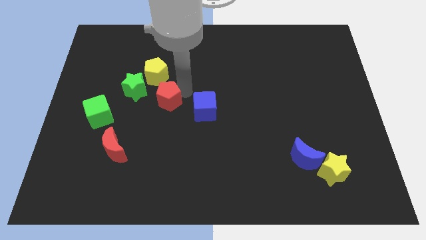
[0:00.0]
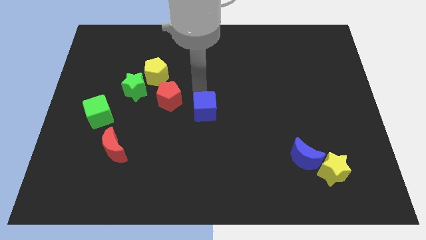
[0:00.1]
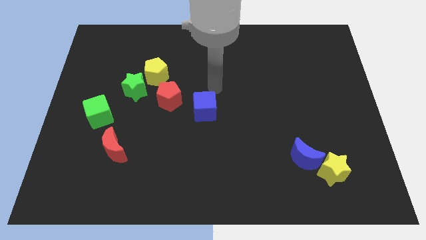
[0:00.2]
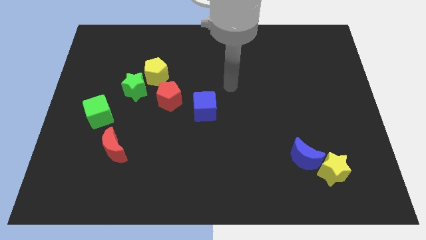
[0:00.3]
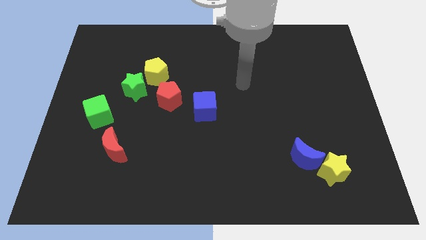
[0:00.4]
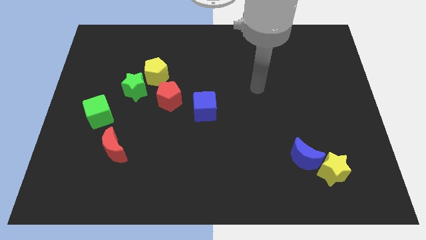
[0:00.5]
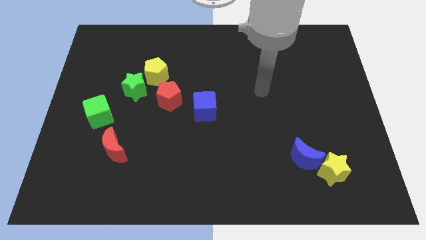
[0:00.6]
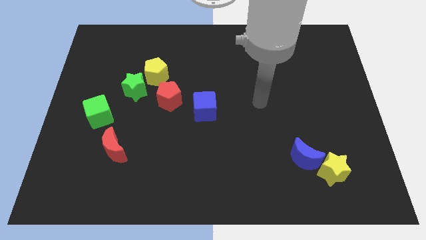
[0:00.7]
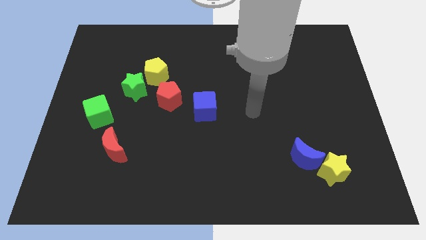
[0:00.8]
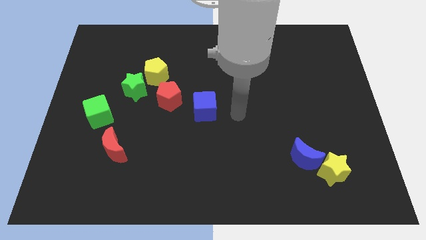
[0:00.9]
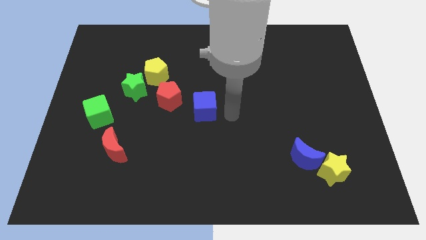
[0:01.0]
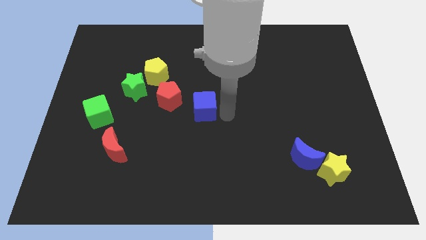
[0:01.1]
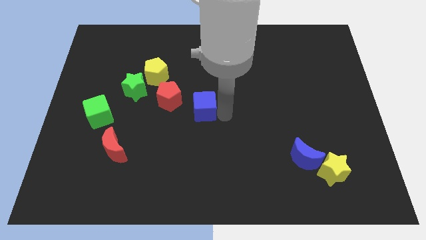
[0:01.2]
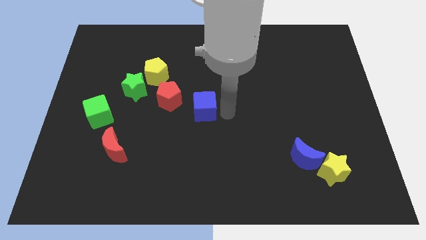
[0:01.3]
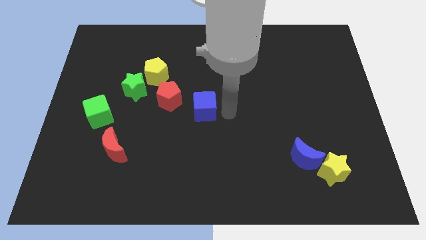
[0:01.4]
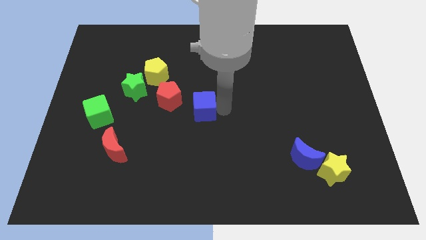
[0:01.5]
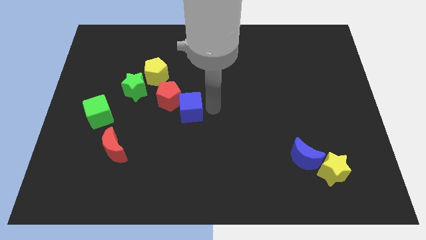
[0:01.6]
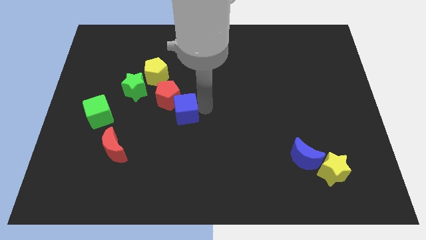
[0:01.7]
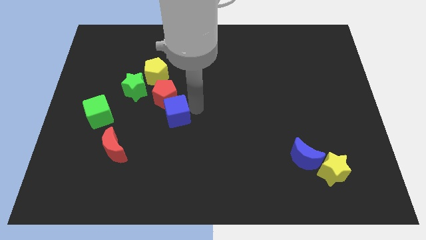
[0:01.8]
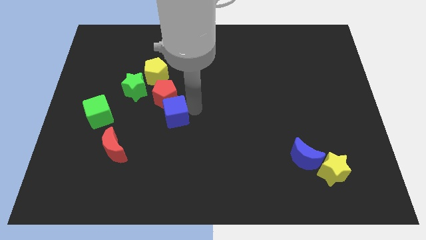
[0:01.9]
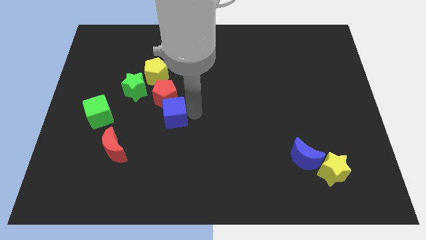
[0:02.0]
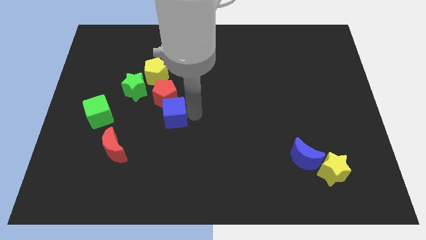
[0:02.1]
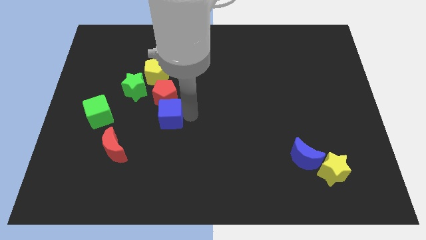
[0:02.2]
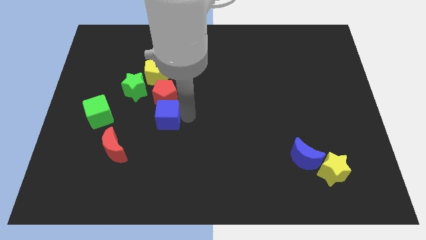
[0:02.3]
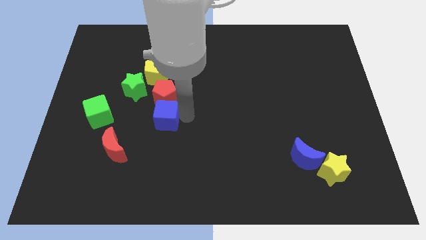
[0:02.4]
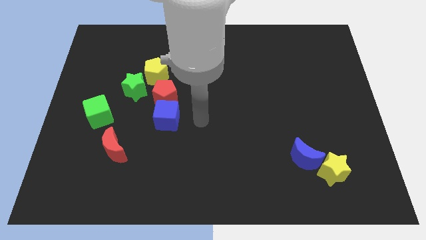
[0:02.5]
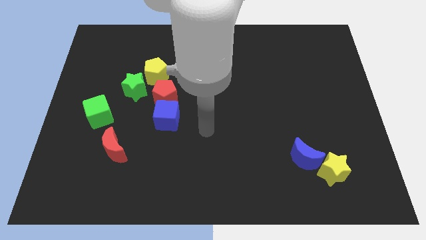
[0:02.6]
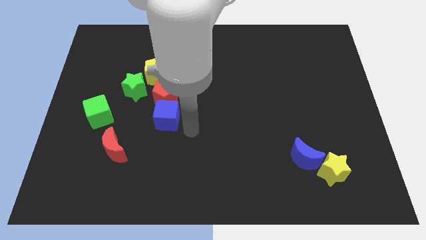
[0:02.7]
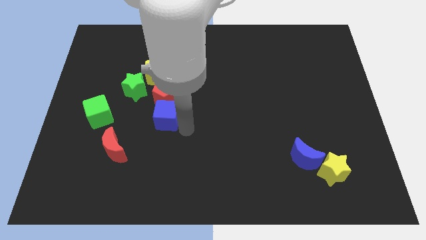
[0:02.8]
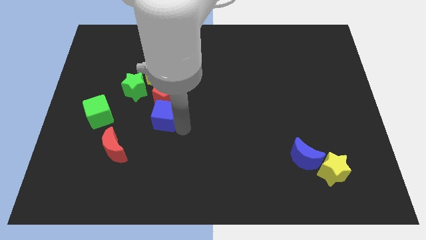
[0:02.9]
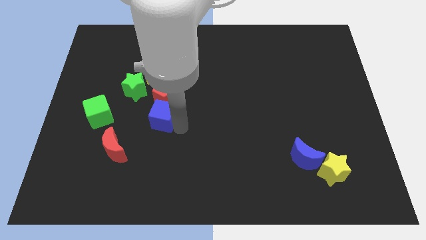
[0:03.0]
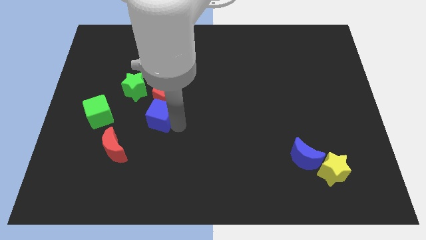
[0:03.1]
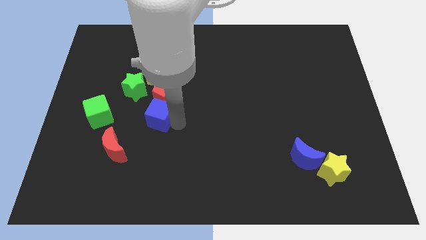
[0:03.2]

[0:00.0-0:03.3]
place blue cube to the bottom of red pentagon

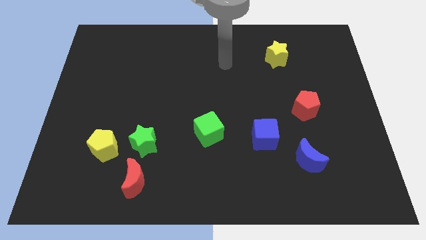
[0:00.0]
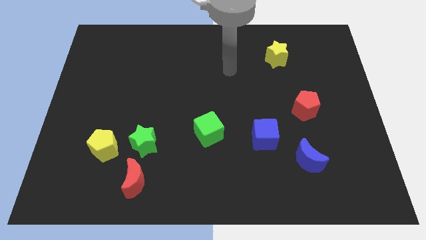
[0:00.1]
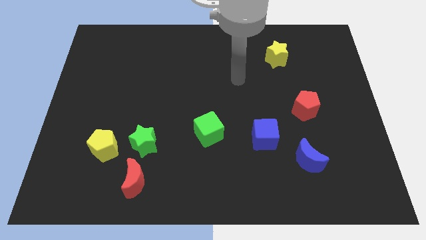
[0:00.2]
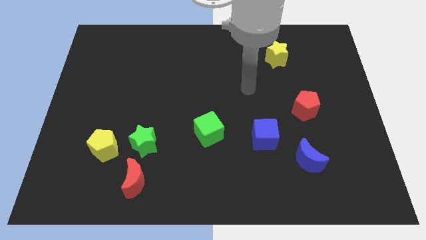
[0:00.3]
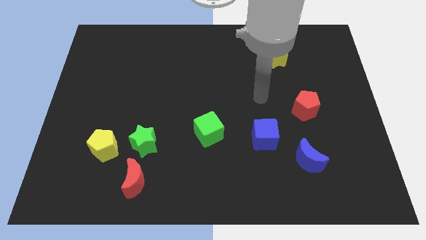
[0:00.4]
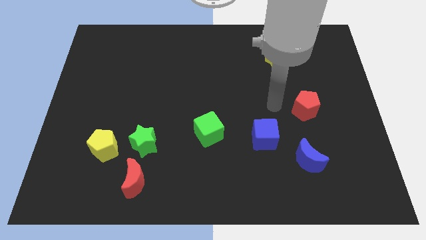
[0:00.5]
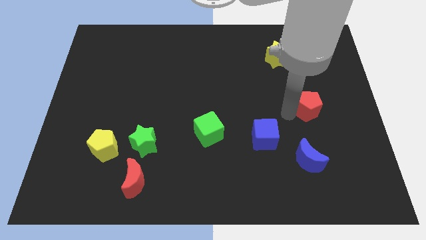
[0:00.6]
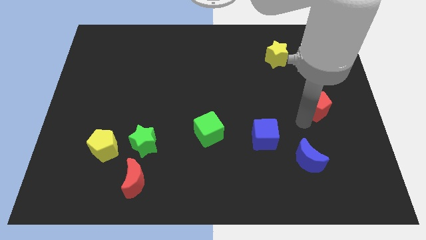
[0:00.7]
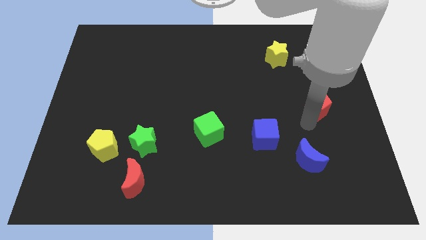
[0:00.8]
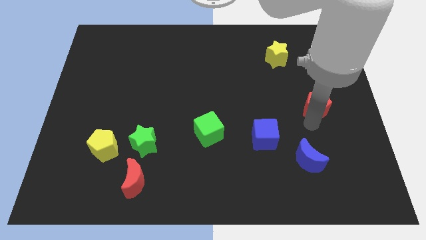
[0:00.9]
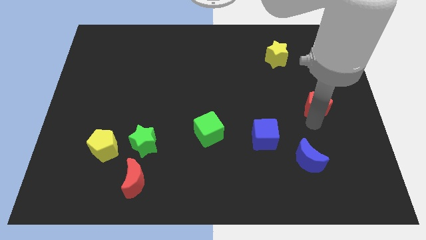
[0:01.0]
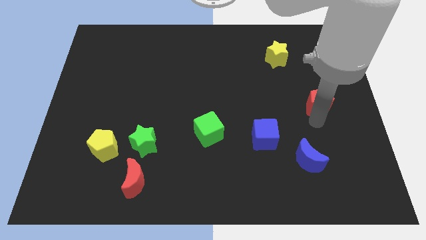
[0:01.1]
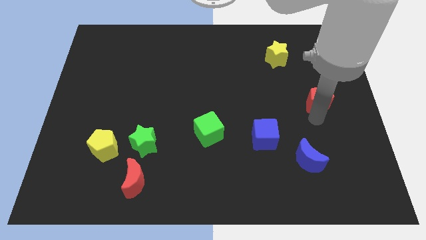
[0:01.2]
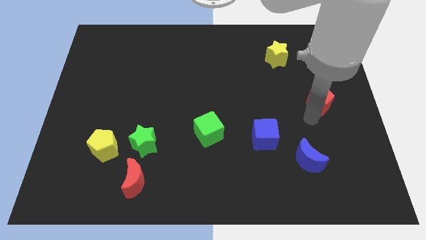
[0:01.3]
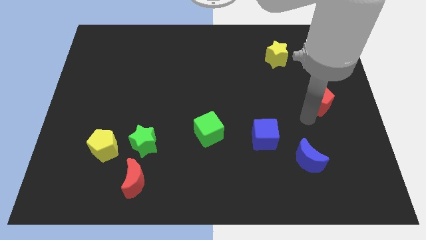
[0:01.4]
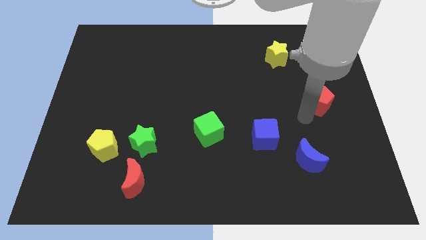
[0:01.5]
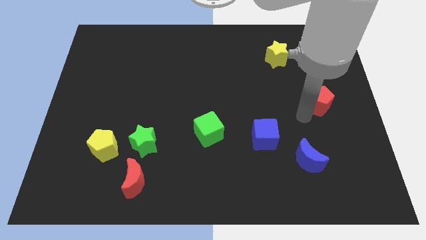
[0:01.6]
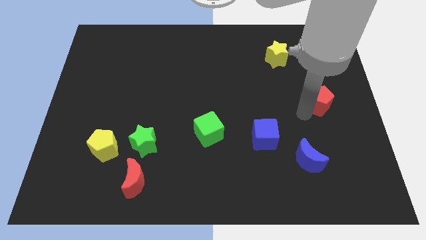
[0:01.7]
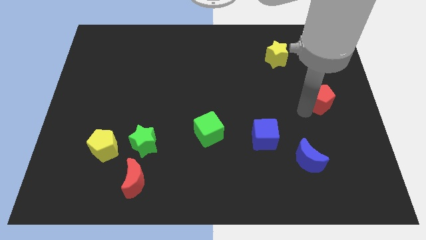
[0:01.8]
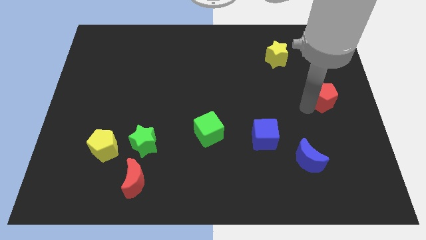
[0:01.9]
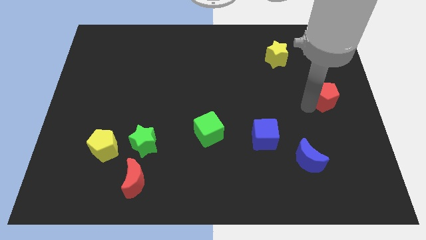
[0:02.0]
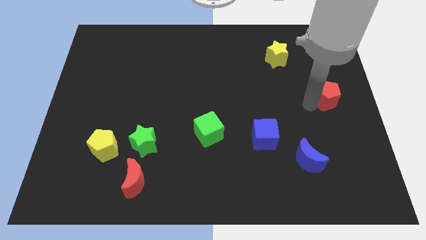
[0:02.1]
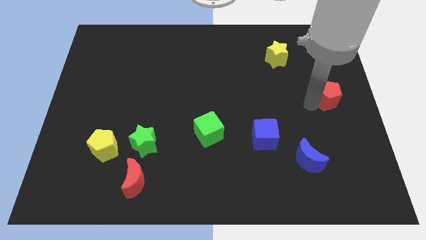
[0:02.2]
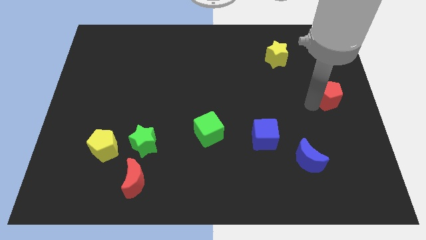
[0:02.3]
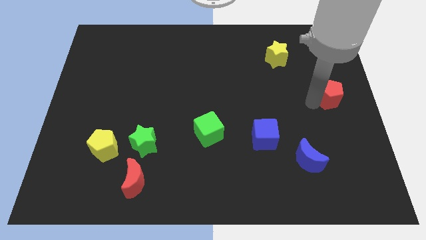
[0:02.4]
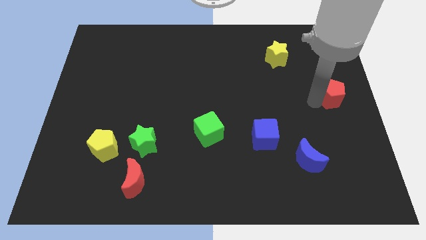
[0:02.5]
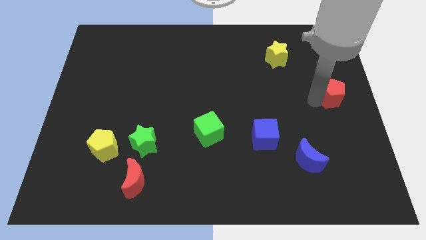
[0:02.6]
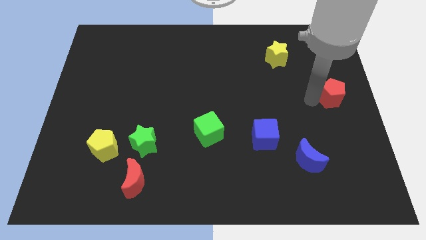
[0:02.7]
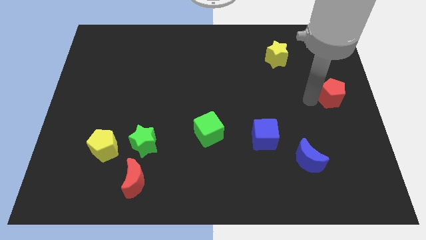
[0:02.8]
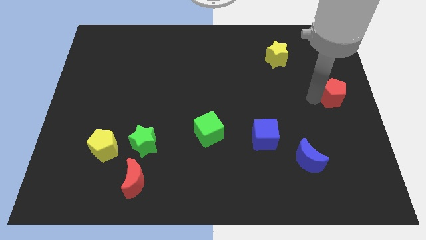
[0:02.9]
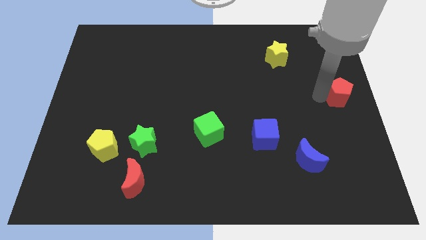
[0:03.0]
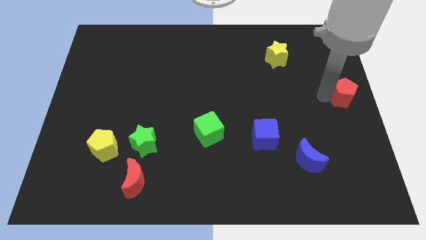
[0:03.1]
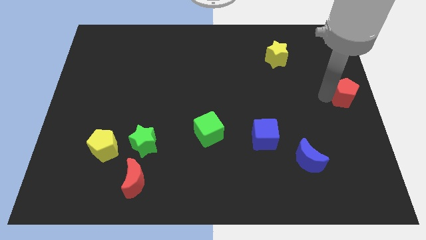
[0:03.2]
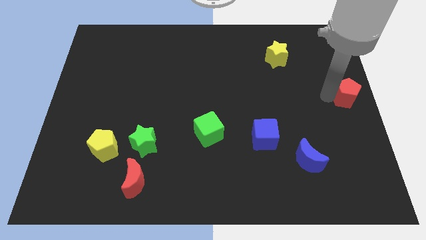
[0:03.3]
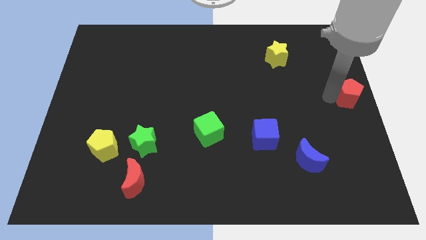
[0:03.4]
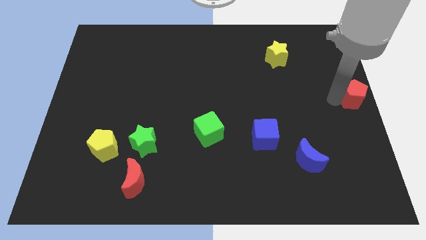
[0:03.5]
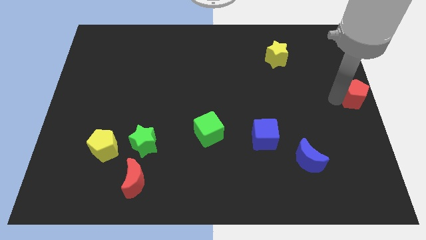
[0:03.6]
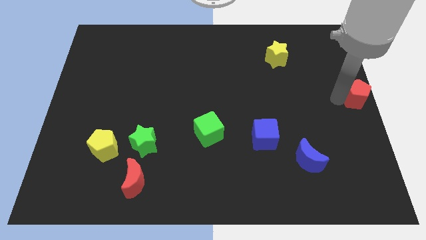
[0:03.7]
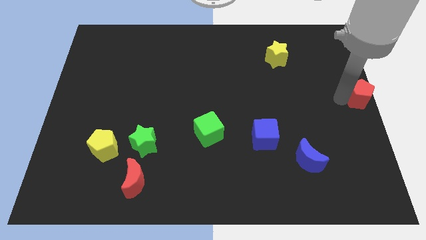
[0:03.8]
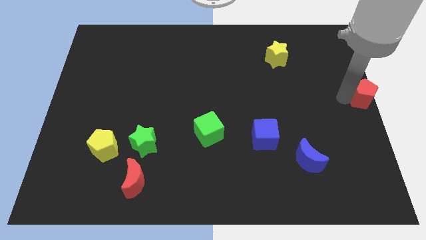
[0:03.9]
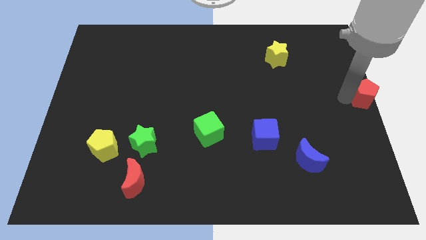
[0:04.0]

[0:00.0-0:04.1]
slide red pentagon to the center right

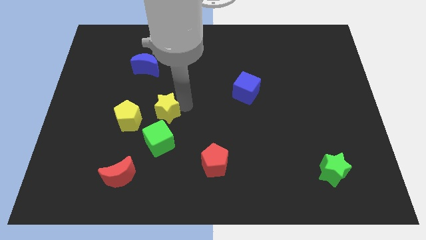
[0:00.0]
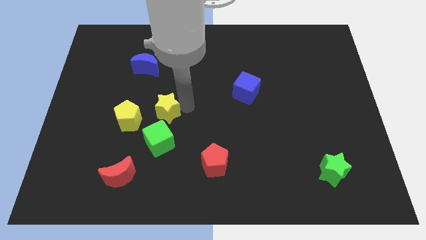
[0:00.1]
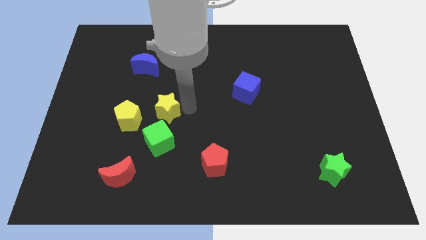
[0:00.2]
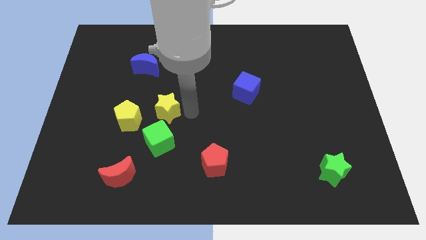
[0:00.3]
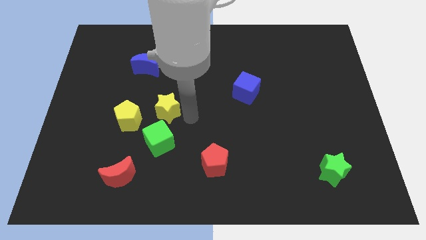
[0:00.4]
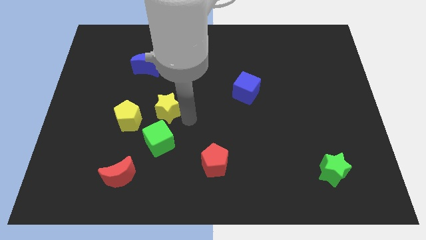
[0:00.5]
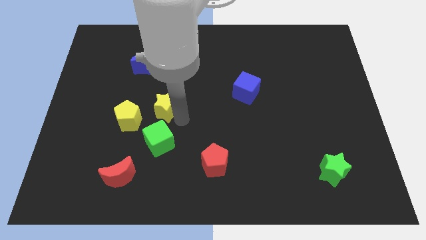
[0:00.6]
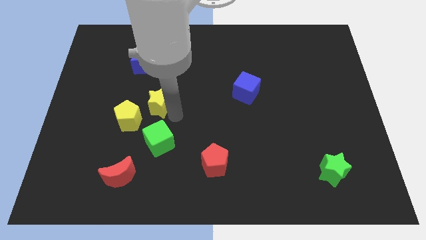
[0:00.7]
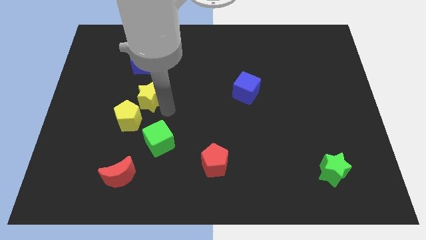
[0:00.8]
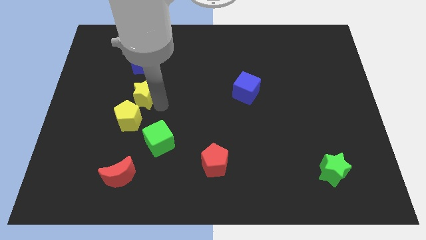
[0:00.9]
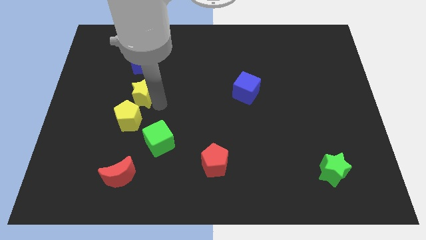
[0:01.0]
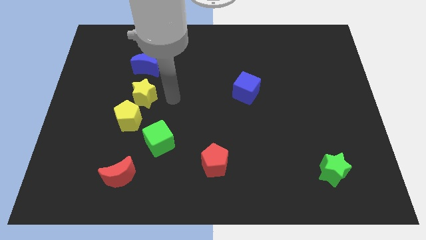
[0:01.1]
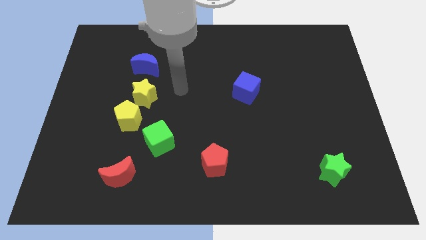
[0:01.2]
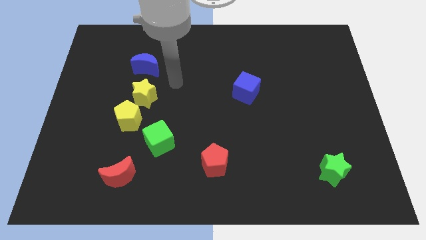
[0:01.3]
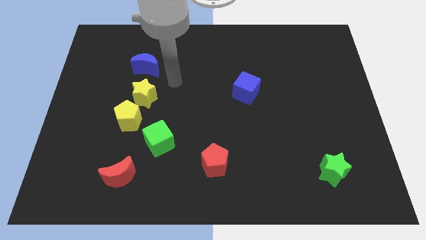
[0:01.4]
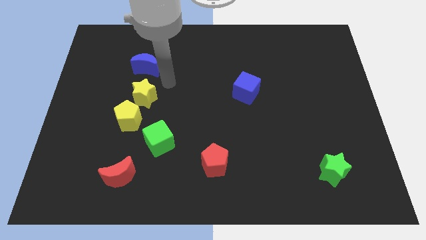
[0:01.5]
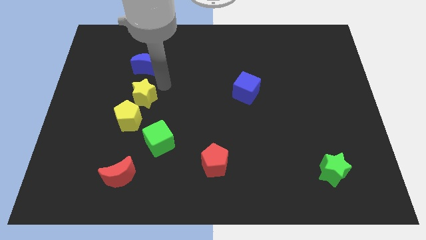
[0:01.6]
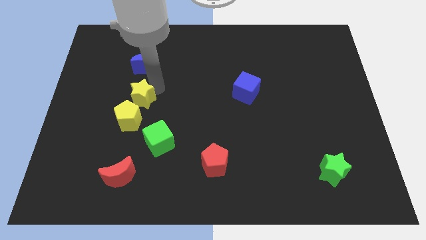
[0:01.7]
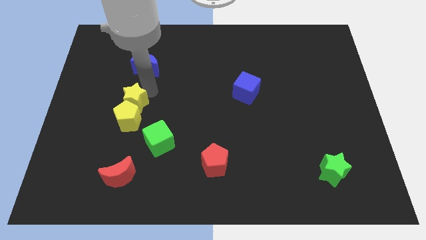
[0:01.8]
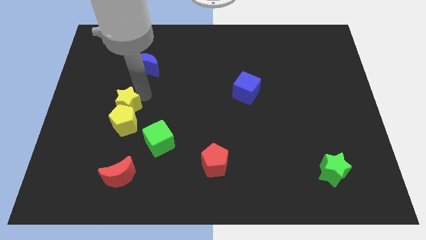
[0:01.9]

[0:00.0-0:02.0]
slide the yellow star vertically above the yellow pentagon
